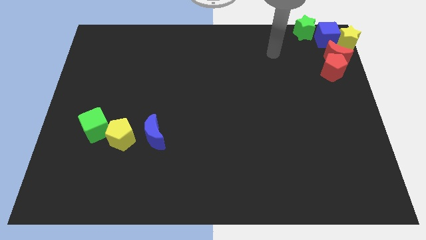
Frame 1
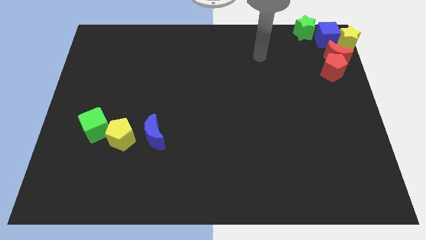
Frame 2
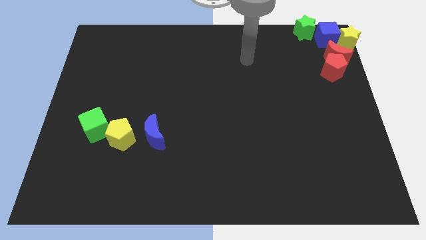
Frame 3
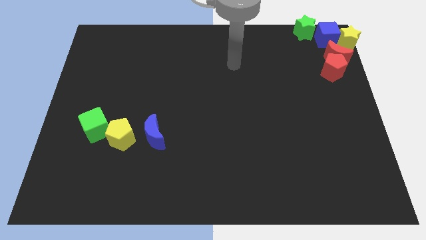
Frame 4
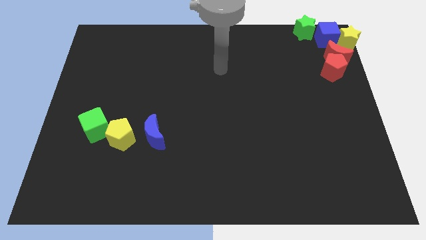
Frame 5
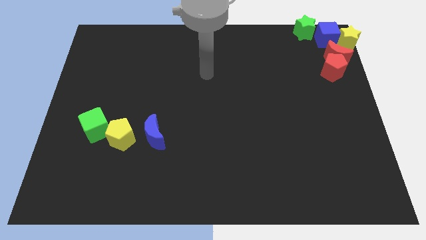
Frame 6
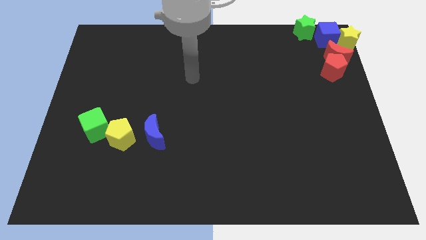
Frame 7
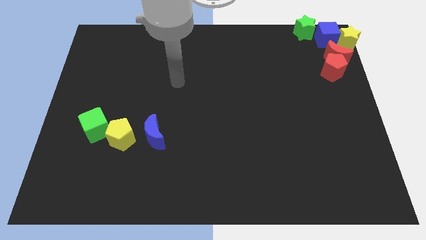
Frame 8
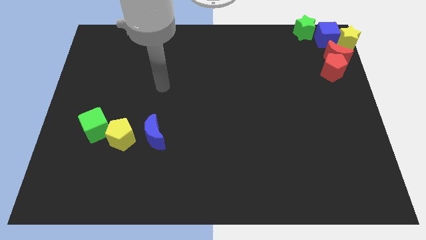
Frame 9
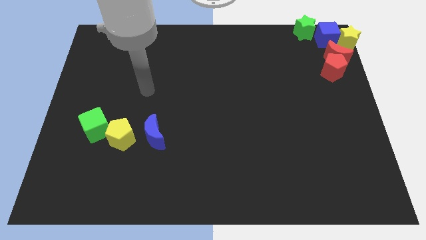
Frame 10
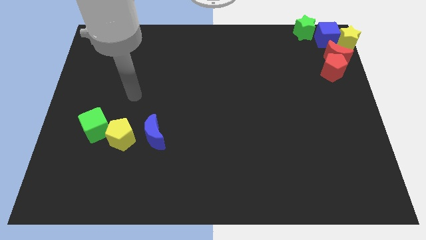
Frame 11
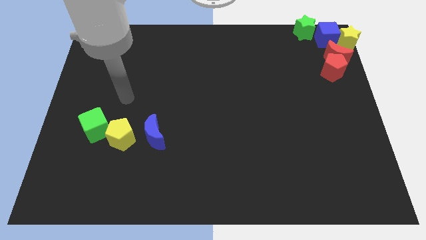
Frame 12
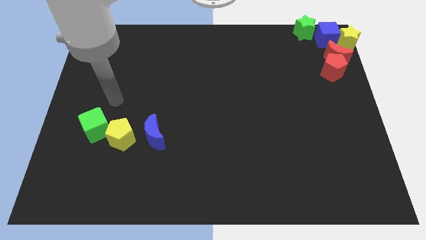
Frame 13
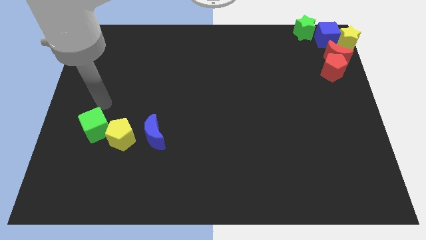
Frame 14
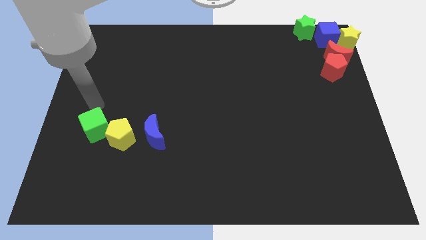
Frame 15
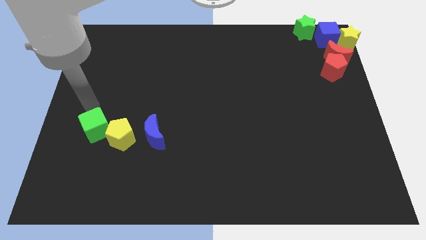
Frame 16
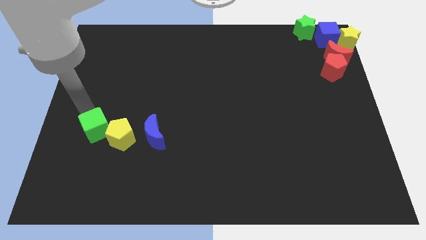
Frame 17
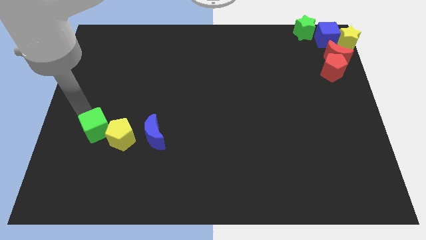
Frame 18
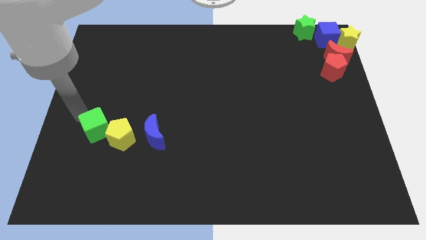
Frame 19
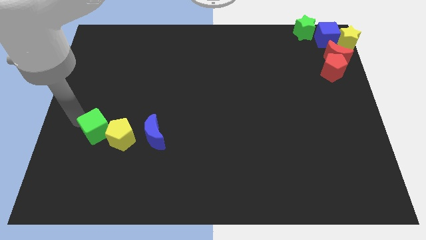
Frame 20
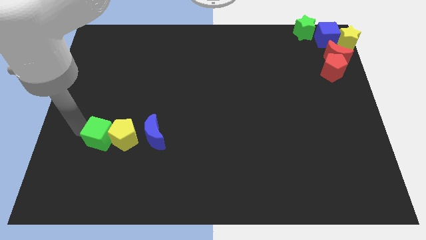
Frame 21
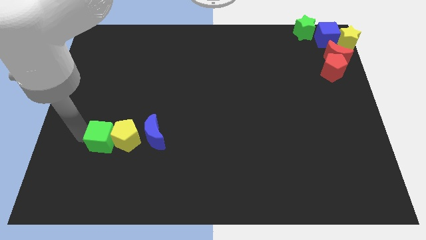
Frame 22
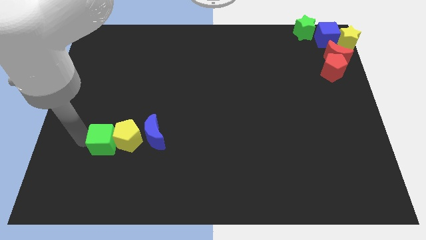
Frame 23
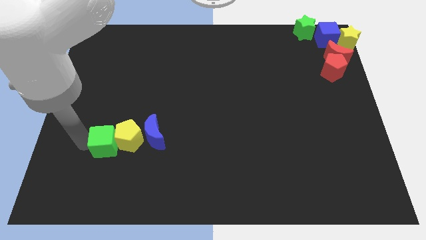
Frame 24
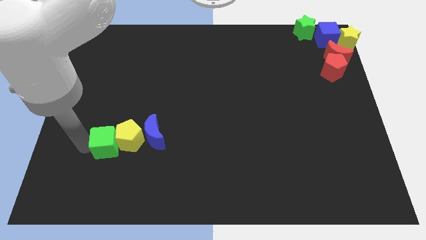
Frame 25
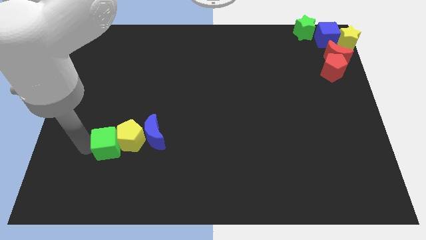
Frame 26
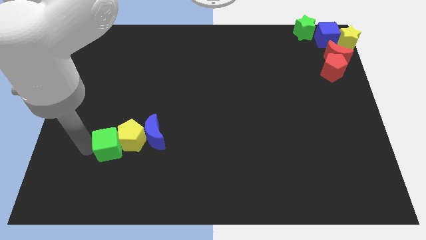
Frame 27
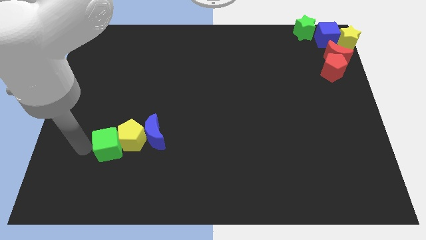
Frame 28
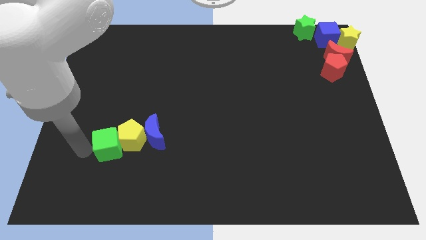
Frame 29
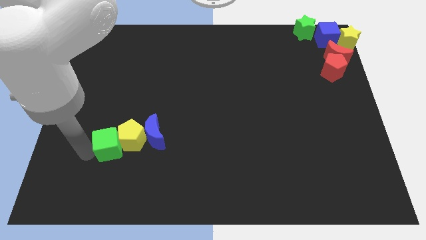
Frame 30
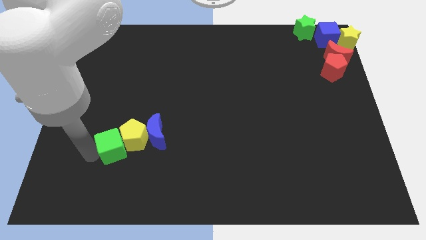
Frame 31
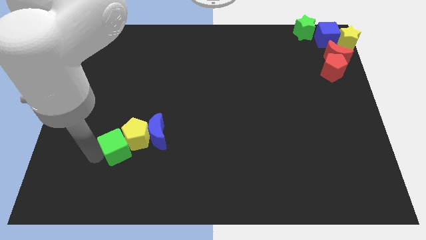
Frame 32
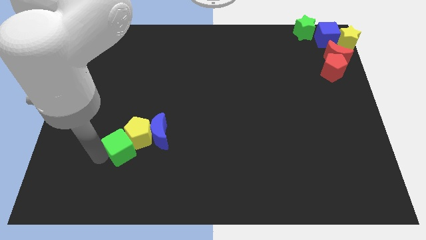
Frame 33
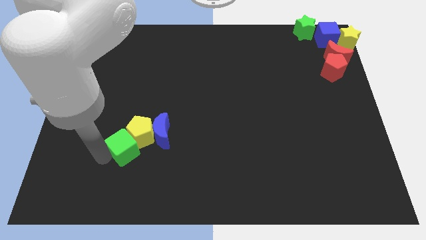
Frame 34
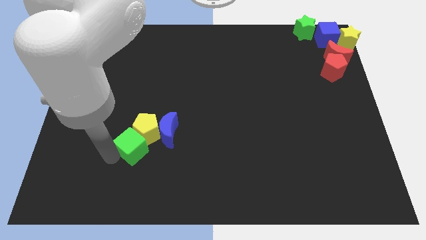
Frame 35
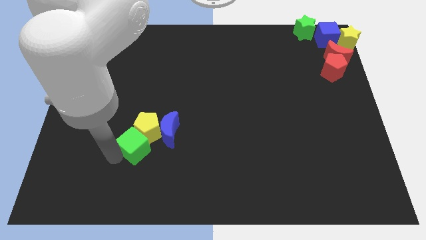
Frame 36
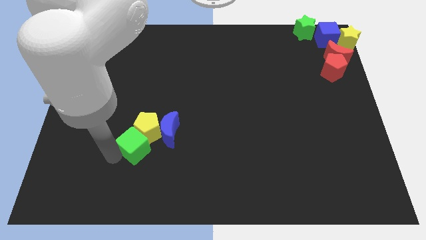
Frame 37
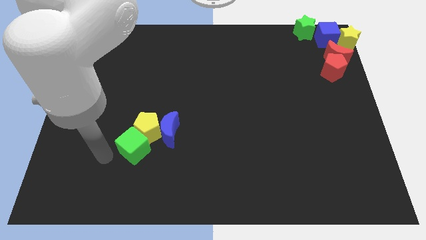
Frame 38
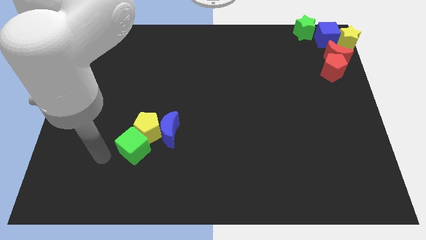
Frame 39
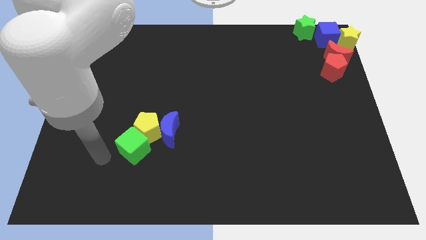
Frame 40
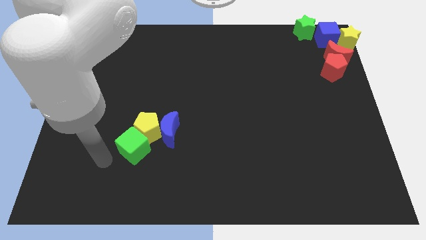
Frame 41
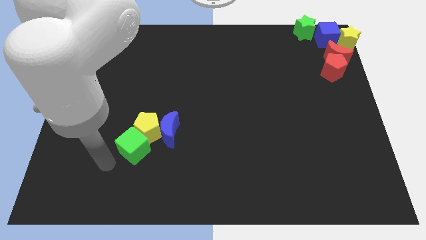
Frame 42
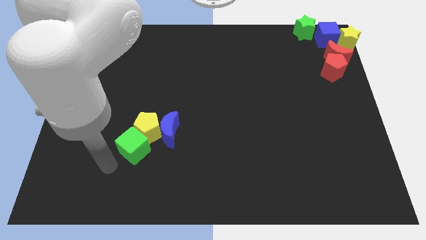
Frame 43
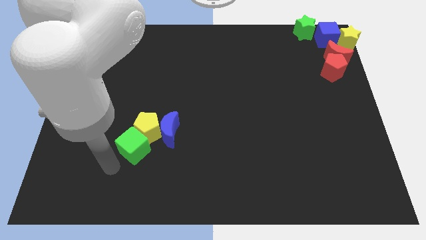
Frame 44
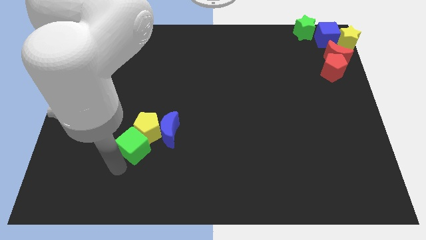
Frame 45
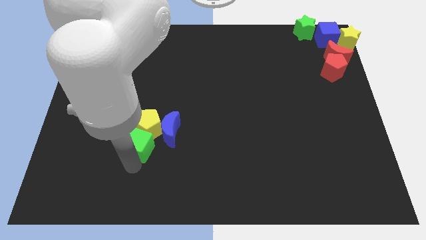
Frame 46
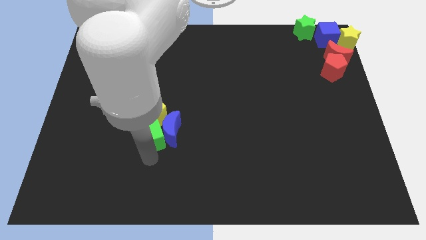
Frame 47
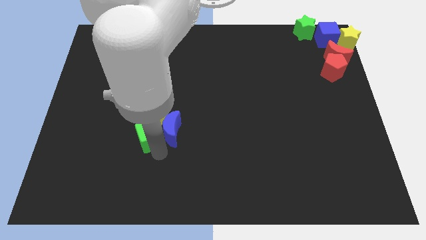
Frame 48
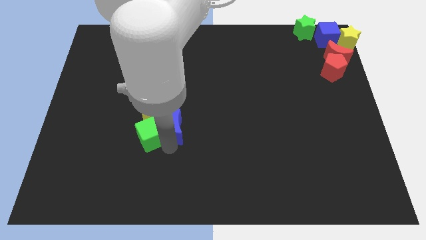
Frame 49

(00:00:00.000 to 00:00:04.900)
place green cube to the bottom of yellow pentagon

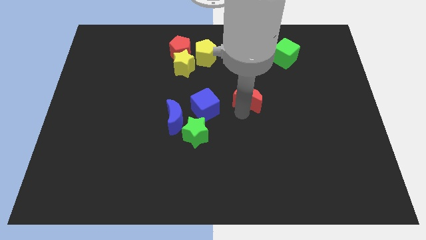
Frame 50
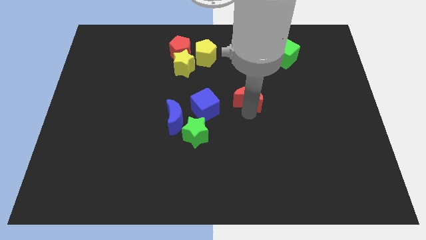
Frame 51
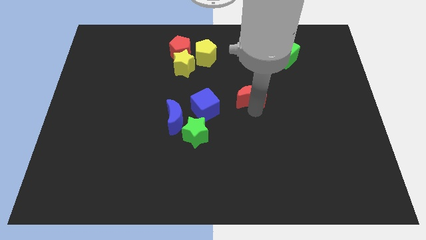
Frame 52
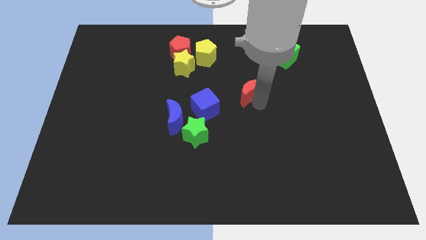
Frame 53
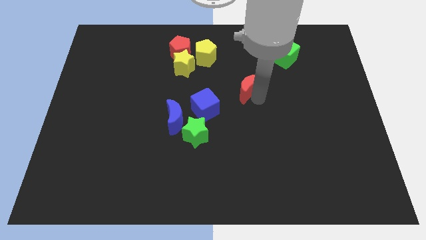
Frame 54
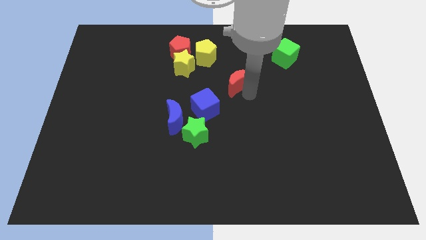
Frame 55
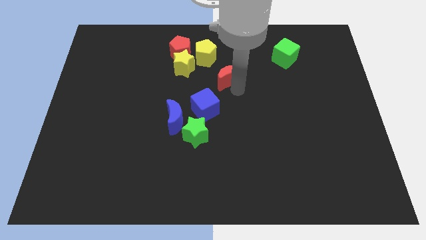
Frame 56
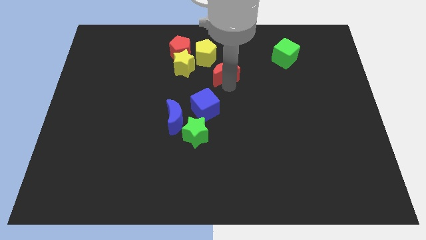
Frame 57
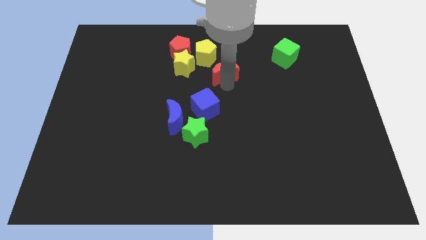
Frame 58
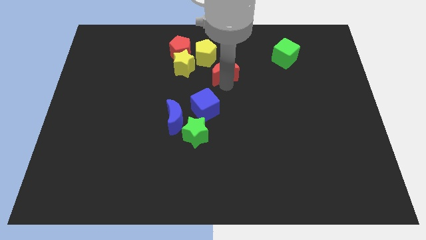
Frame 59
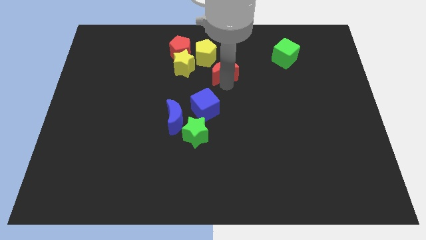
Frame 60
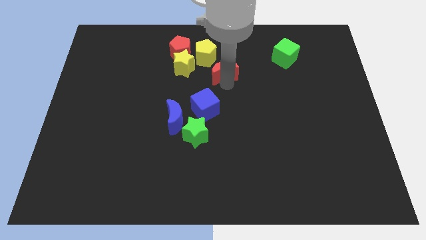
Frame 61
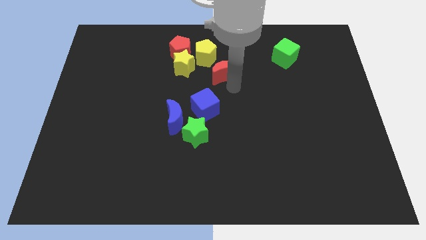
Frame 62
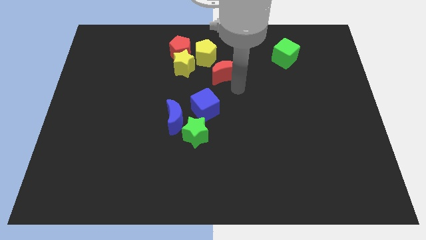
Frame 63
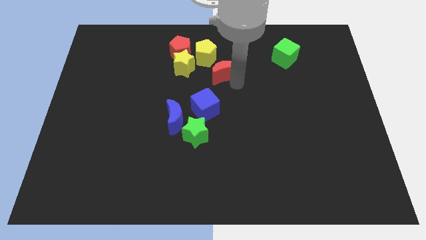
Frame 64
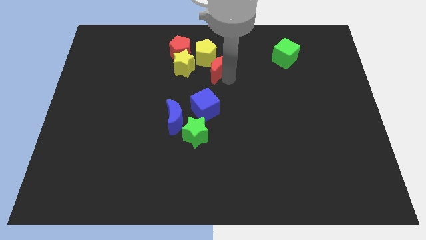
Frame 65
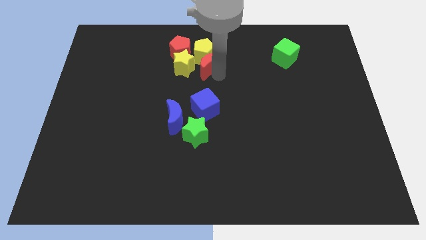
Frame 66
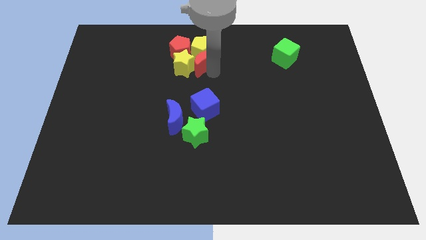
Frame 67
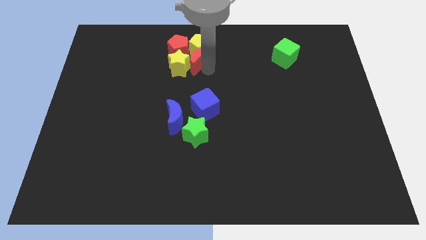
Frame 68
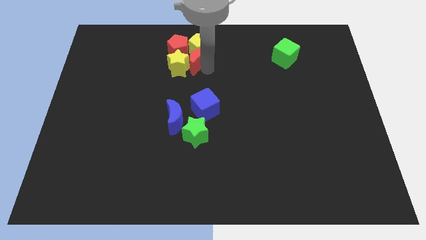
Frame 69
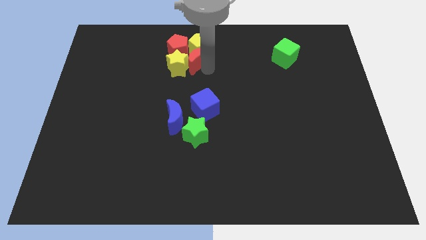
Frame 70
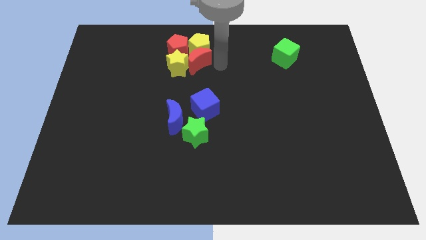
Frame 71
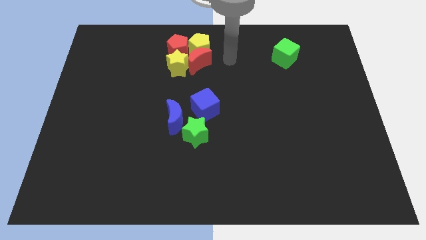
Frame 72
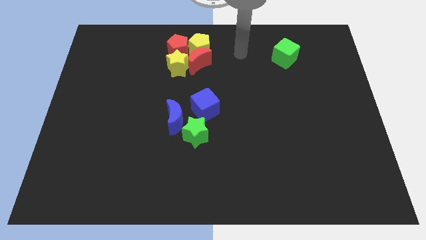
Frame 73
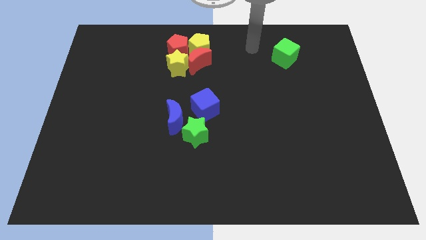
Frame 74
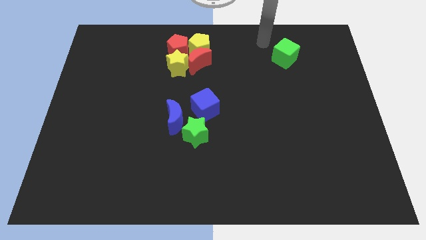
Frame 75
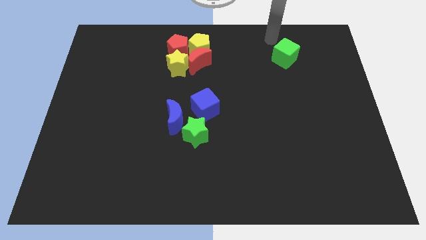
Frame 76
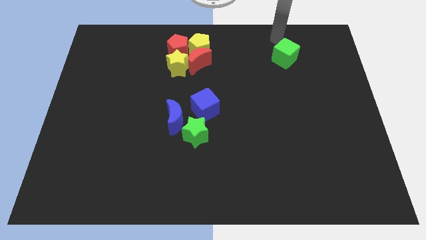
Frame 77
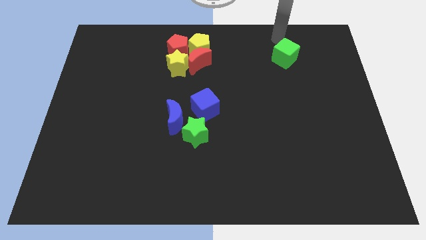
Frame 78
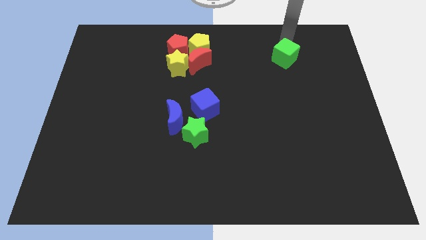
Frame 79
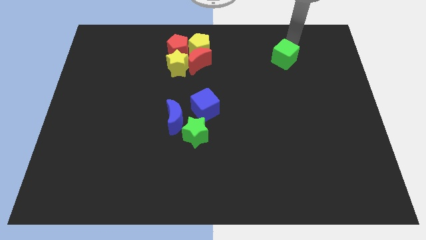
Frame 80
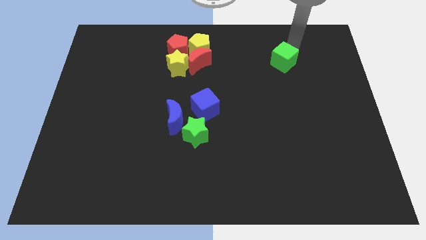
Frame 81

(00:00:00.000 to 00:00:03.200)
push the red crescent into the yellow pentagon

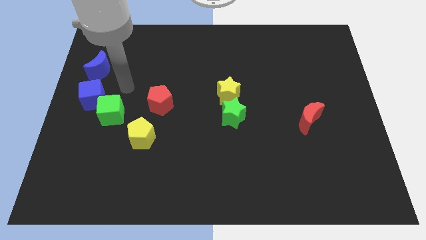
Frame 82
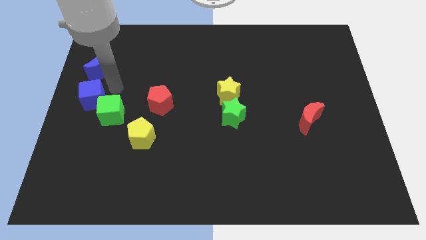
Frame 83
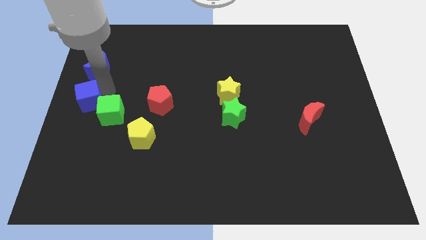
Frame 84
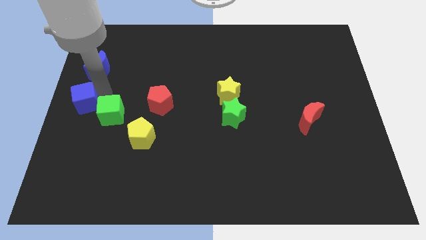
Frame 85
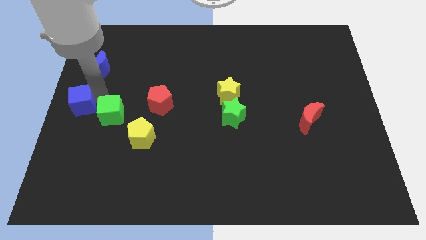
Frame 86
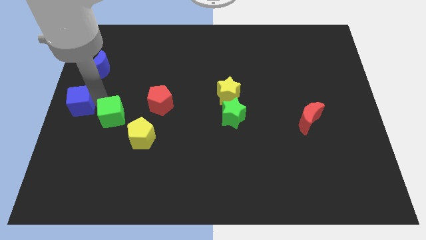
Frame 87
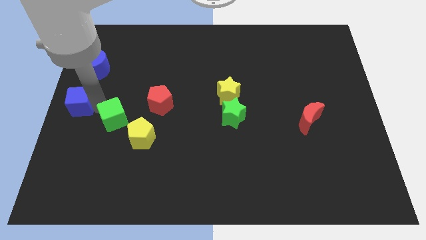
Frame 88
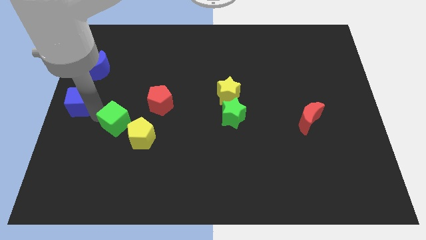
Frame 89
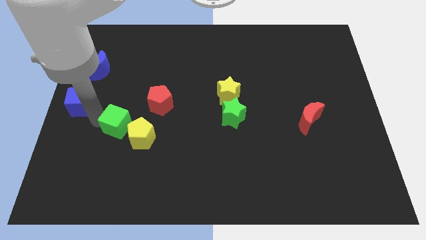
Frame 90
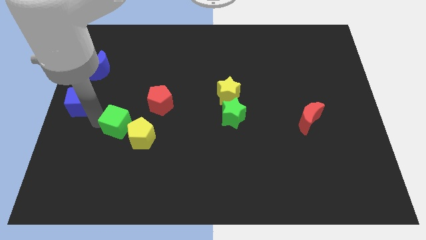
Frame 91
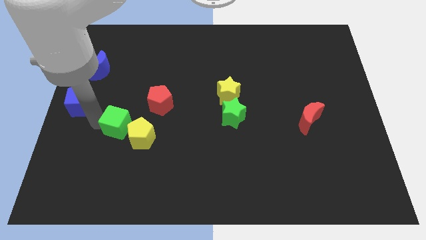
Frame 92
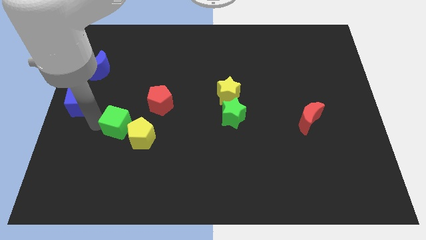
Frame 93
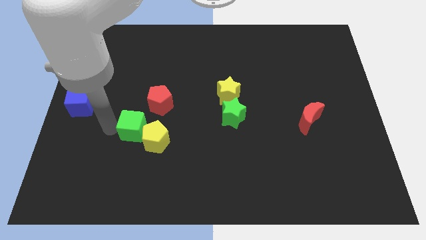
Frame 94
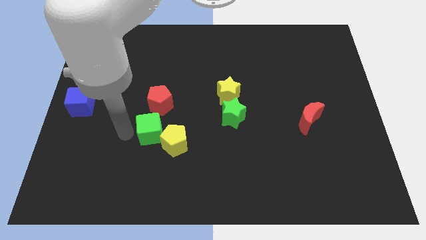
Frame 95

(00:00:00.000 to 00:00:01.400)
separate the green cube and the blue cube
